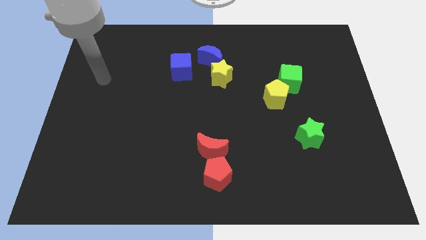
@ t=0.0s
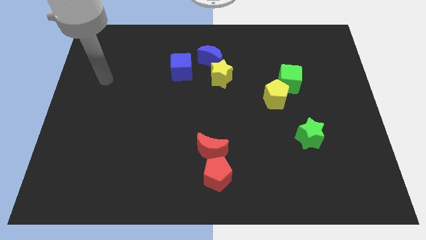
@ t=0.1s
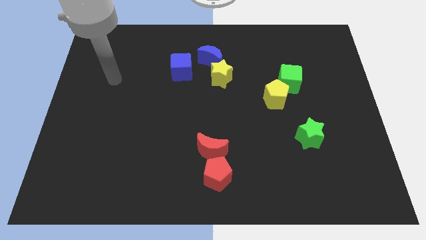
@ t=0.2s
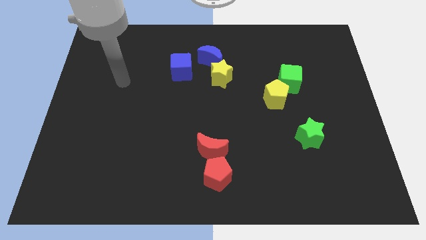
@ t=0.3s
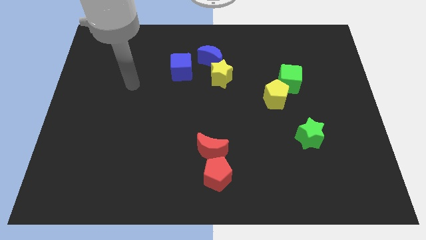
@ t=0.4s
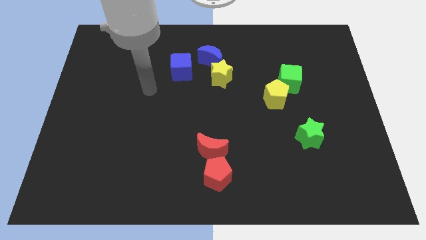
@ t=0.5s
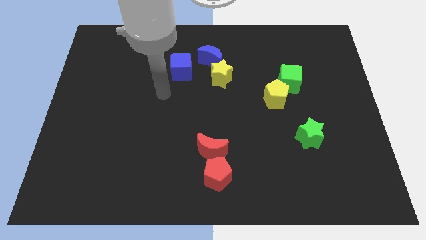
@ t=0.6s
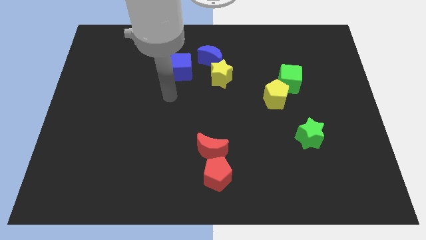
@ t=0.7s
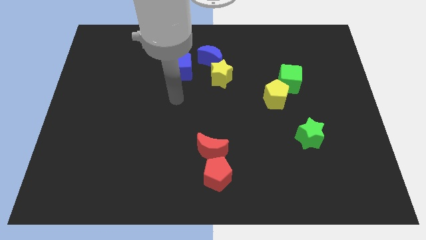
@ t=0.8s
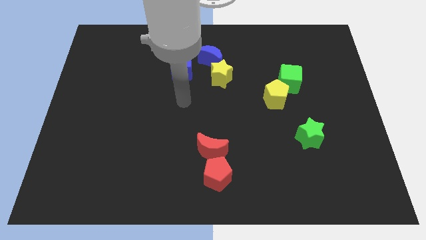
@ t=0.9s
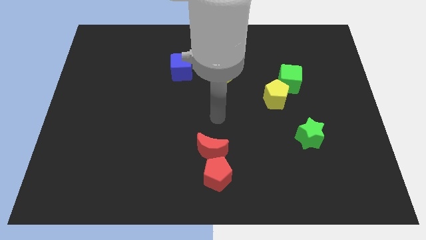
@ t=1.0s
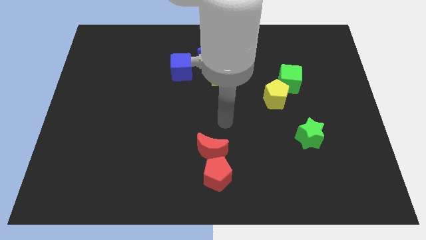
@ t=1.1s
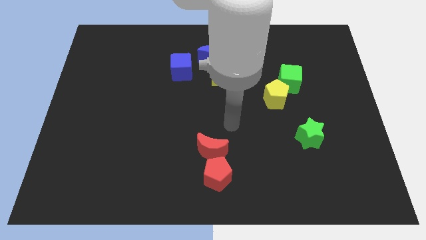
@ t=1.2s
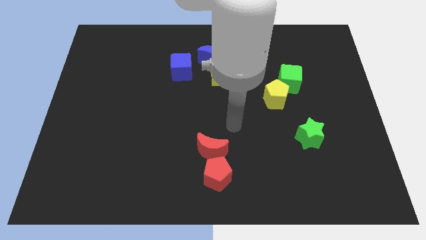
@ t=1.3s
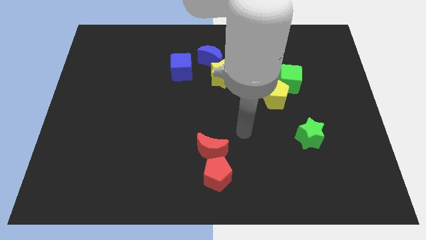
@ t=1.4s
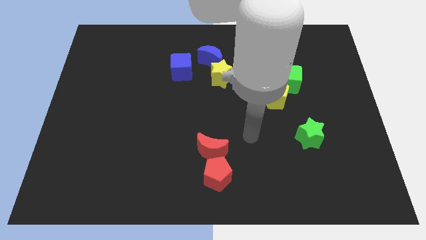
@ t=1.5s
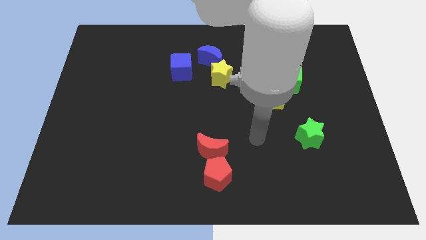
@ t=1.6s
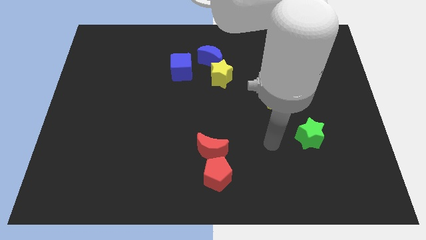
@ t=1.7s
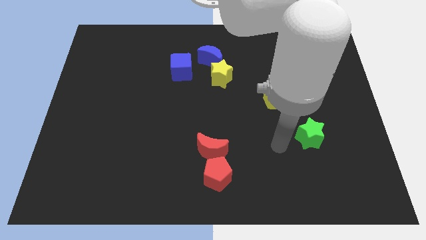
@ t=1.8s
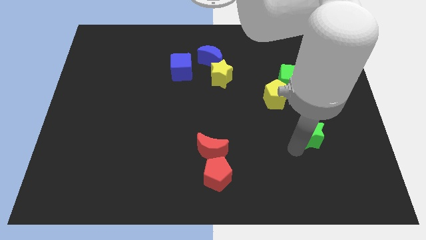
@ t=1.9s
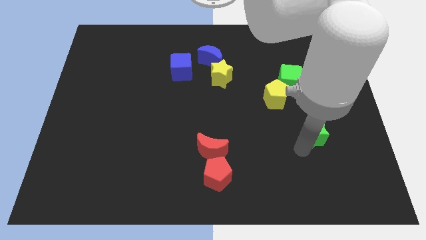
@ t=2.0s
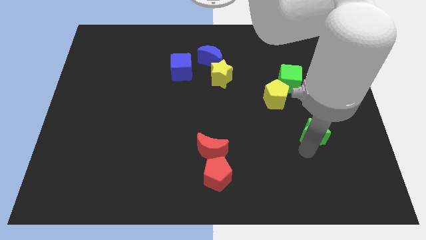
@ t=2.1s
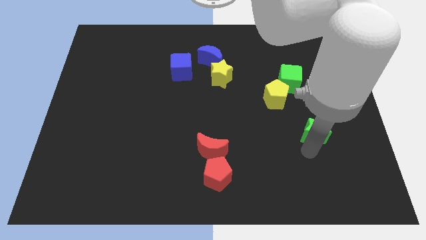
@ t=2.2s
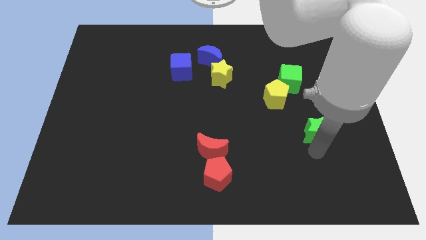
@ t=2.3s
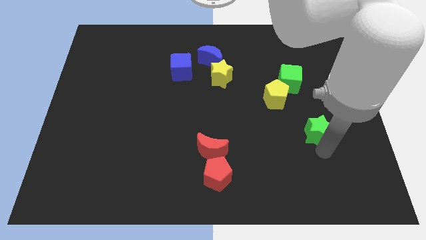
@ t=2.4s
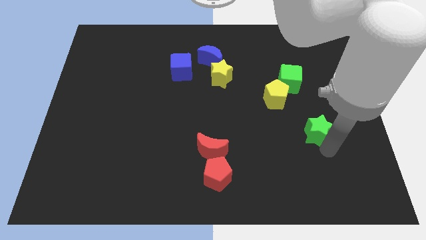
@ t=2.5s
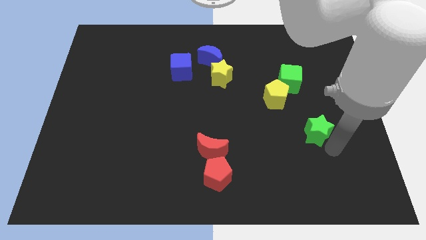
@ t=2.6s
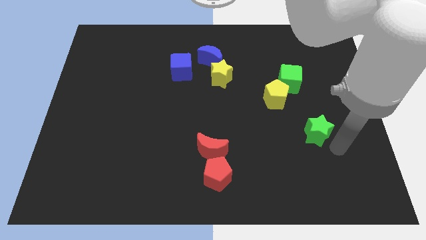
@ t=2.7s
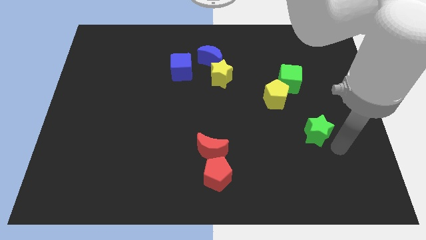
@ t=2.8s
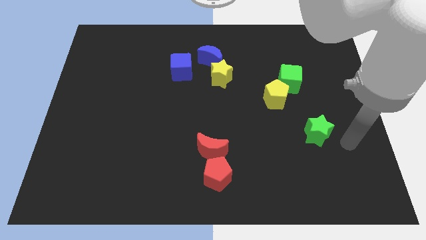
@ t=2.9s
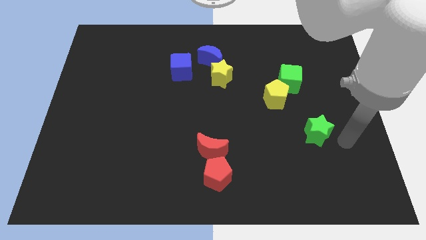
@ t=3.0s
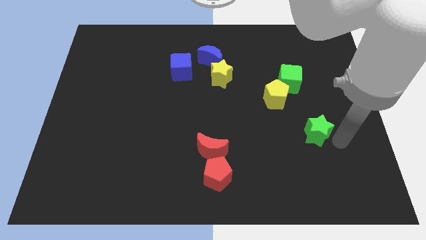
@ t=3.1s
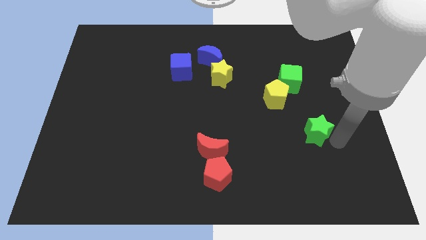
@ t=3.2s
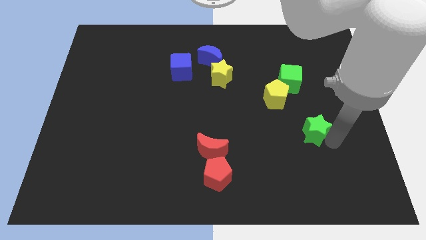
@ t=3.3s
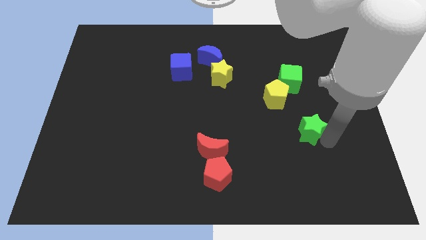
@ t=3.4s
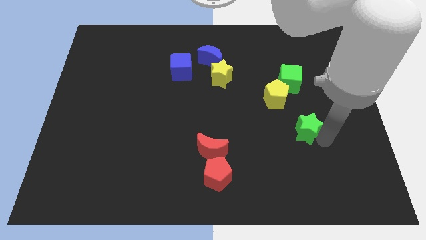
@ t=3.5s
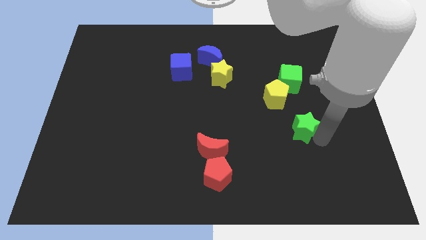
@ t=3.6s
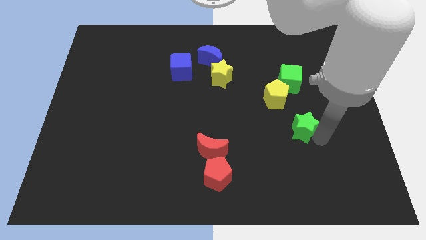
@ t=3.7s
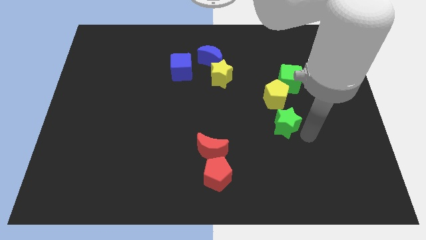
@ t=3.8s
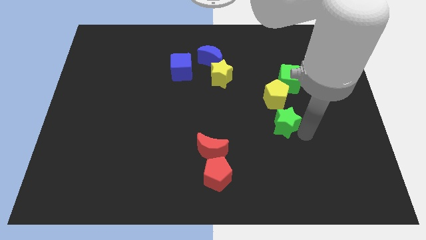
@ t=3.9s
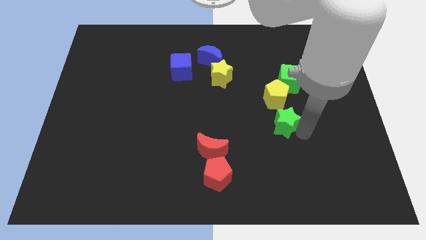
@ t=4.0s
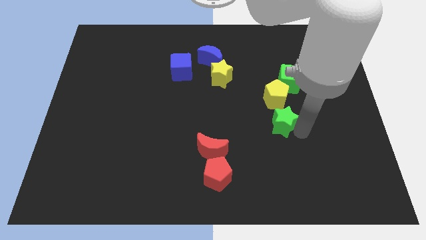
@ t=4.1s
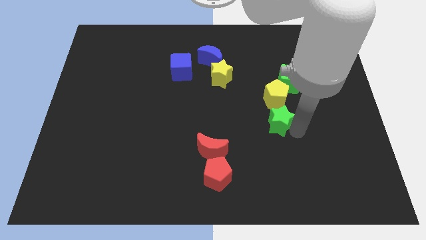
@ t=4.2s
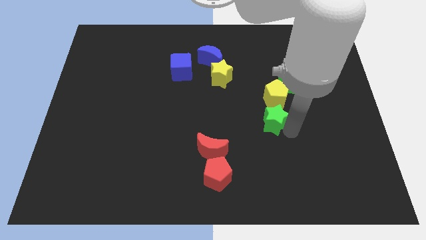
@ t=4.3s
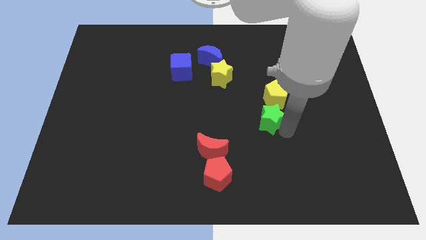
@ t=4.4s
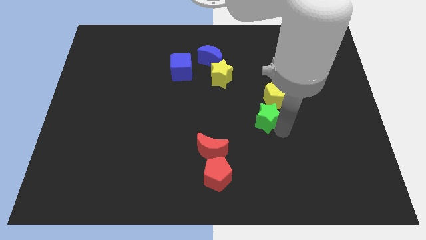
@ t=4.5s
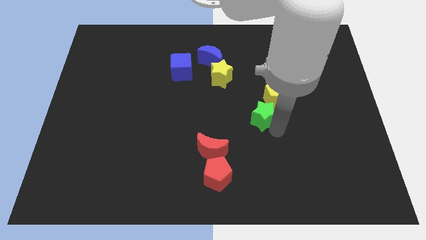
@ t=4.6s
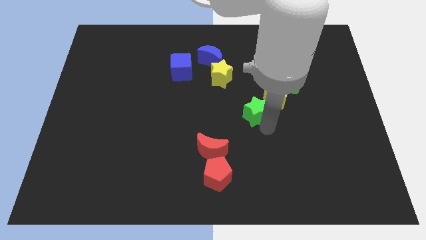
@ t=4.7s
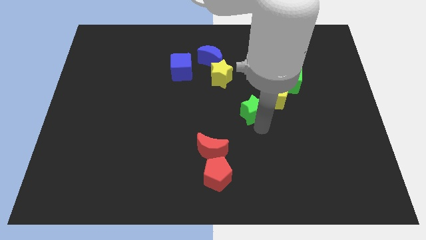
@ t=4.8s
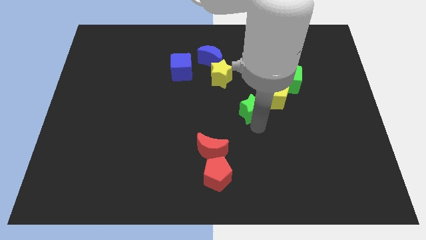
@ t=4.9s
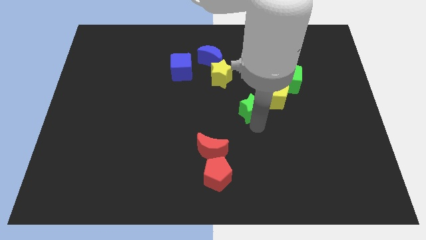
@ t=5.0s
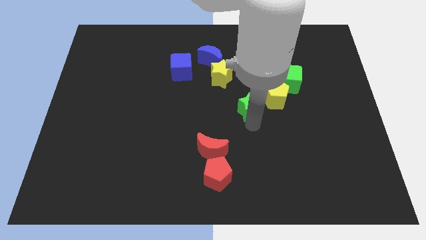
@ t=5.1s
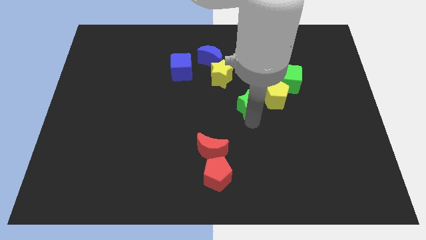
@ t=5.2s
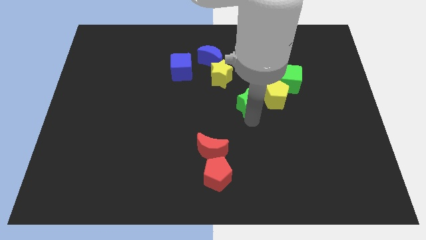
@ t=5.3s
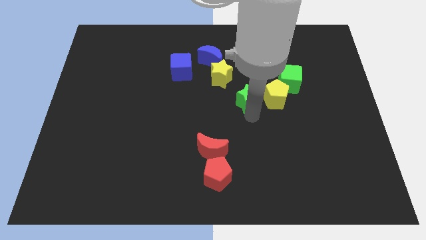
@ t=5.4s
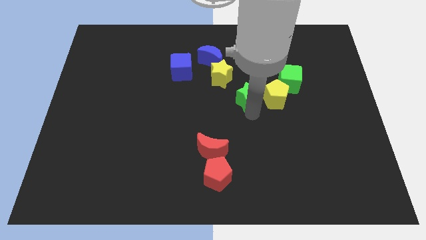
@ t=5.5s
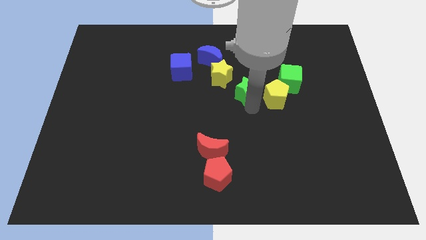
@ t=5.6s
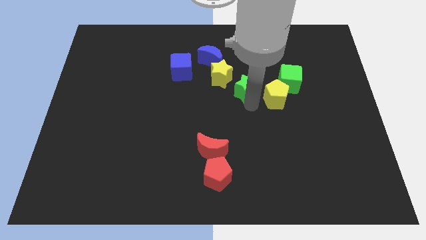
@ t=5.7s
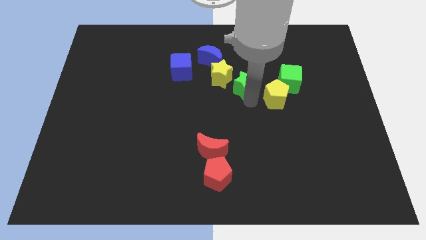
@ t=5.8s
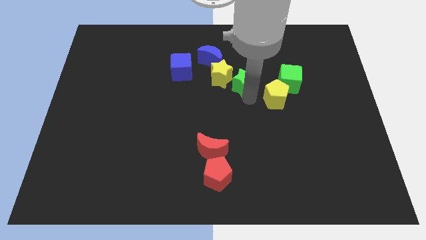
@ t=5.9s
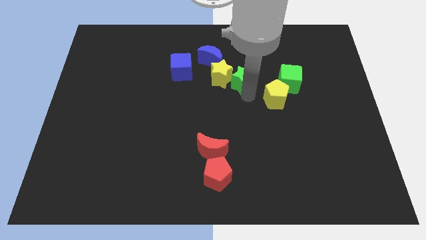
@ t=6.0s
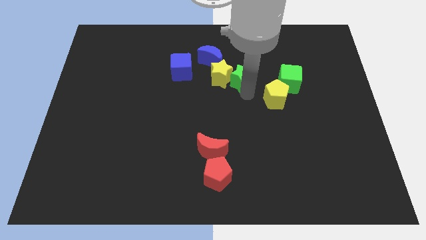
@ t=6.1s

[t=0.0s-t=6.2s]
move the green star towards the yellow star

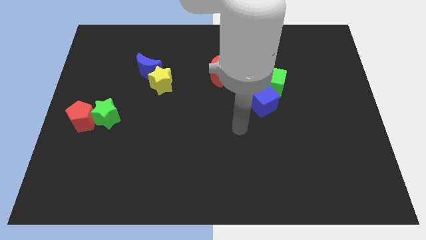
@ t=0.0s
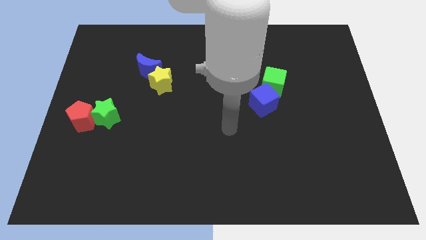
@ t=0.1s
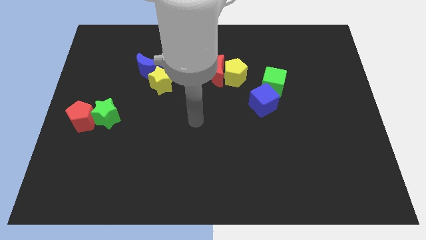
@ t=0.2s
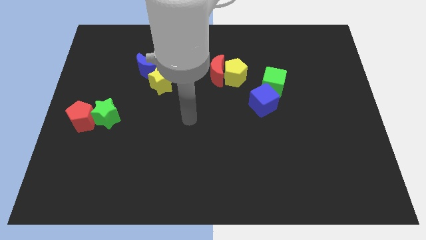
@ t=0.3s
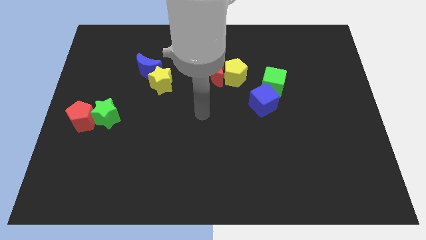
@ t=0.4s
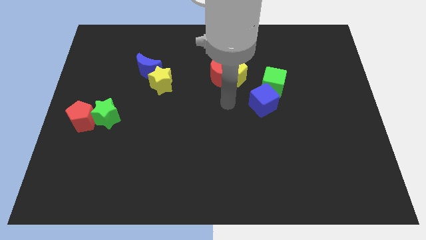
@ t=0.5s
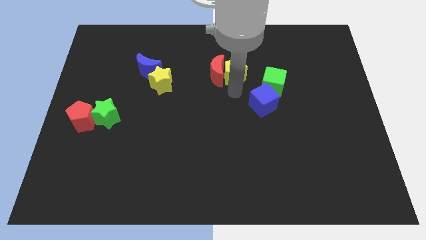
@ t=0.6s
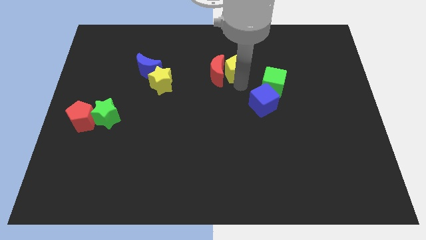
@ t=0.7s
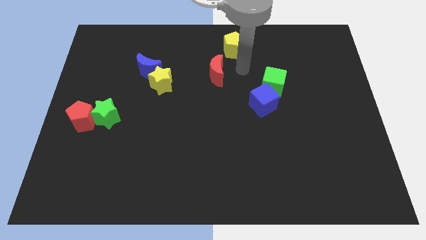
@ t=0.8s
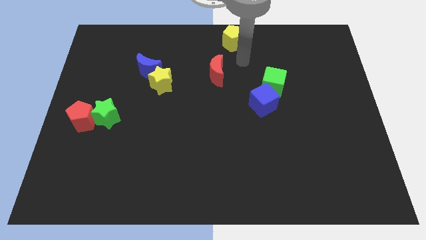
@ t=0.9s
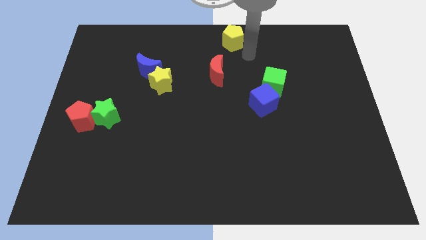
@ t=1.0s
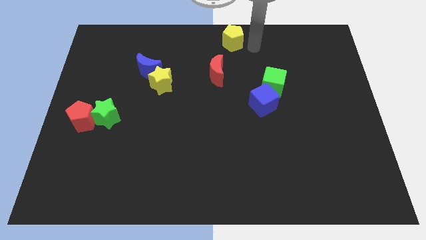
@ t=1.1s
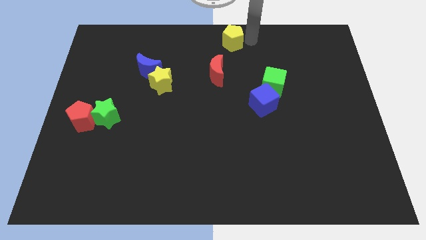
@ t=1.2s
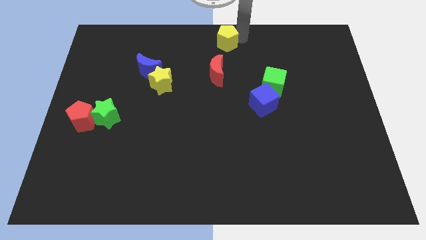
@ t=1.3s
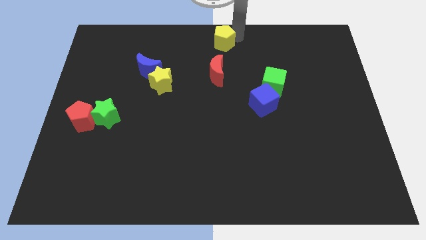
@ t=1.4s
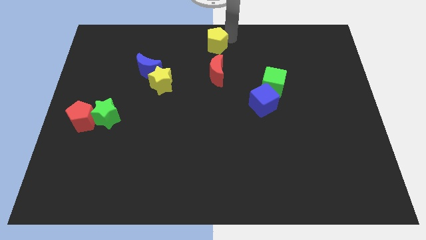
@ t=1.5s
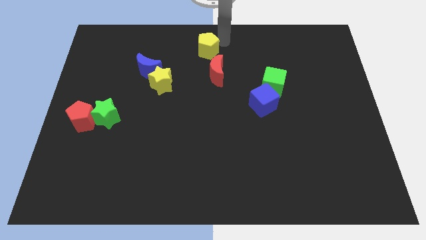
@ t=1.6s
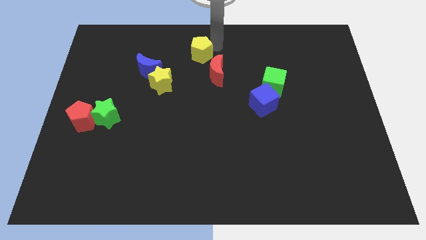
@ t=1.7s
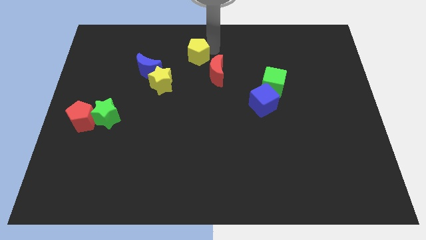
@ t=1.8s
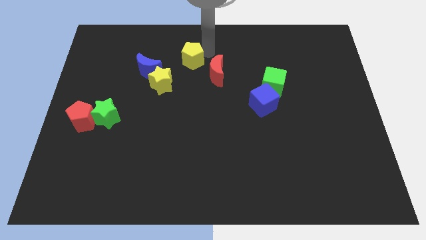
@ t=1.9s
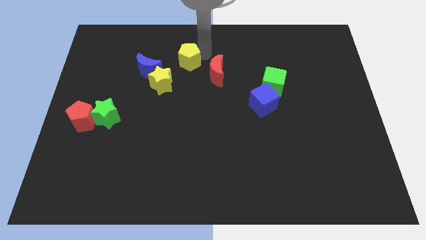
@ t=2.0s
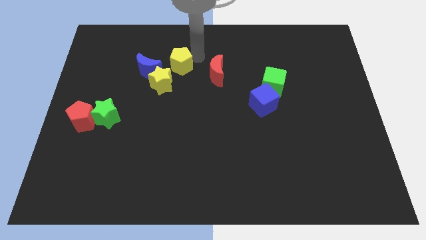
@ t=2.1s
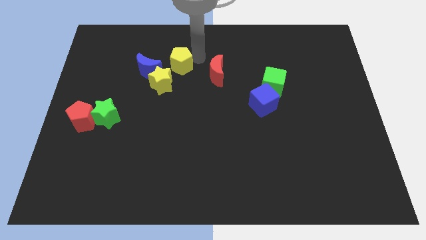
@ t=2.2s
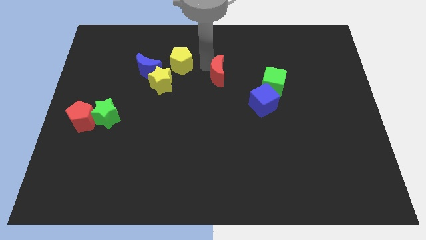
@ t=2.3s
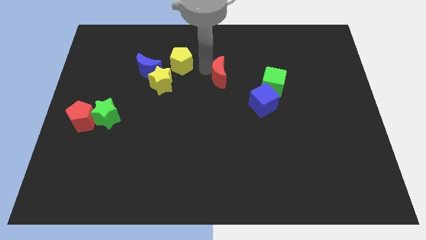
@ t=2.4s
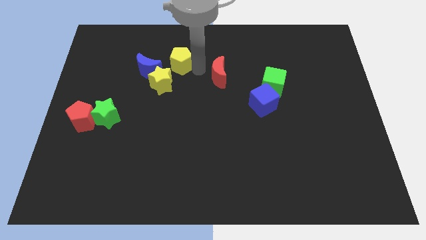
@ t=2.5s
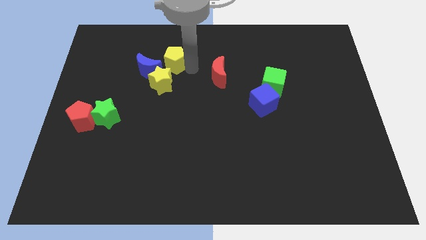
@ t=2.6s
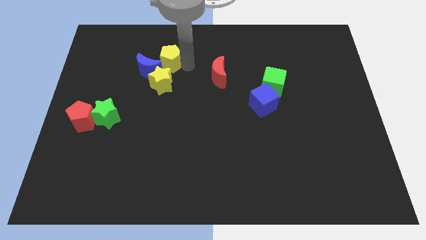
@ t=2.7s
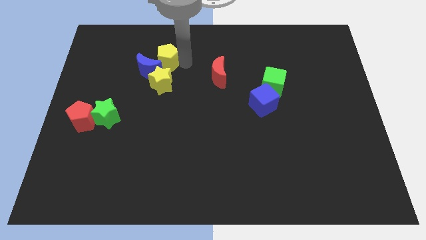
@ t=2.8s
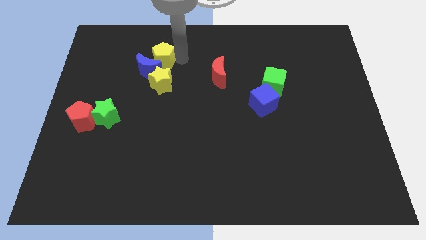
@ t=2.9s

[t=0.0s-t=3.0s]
move the yellow pentagon close to the blue moon
